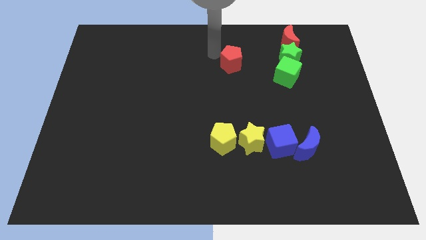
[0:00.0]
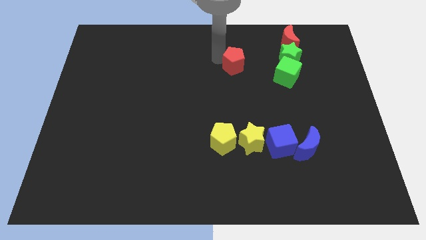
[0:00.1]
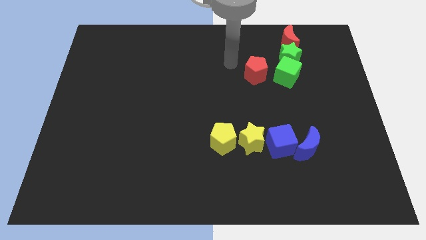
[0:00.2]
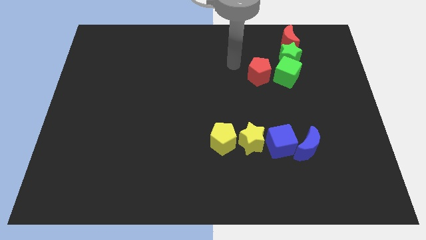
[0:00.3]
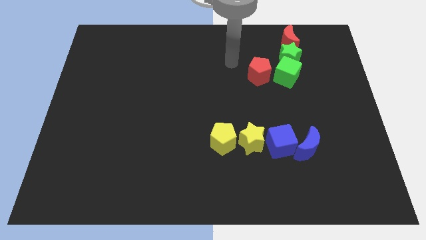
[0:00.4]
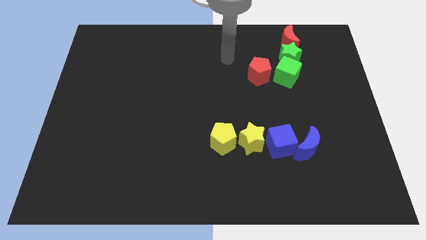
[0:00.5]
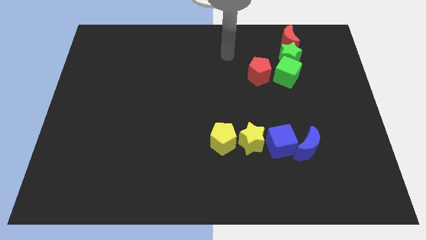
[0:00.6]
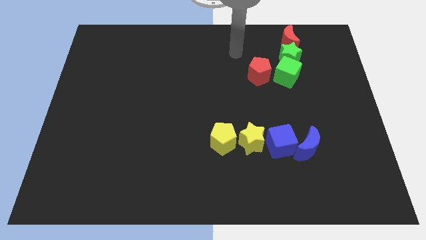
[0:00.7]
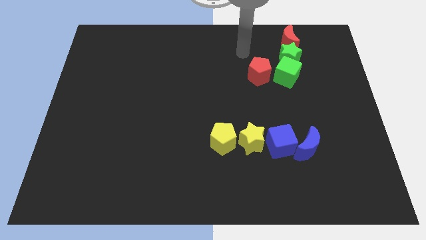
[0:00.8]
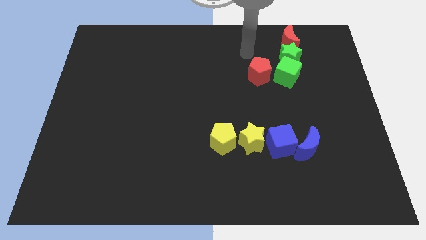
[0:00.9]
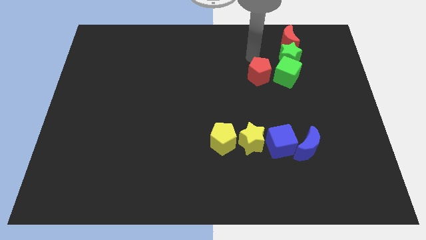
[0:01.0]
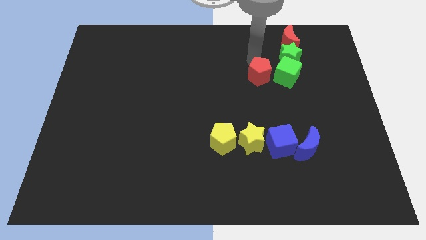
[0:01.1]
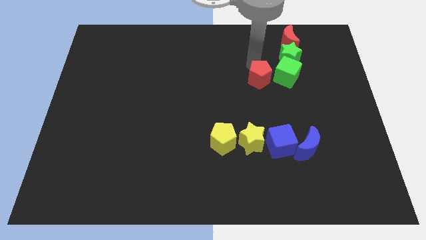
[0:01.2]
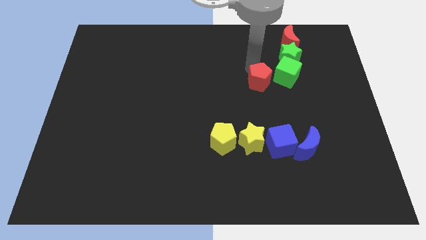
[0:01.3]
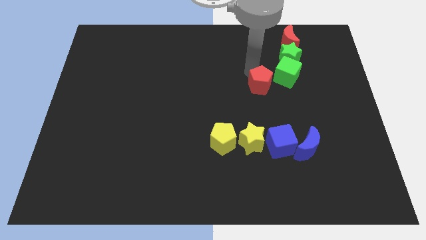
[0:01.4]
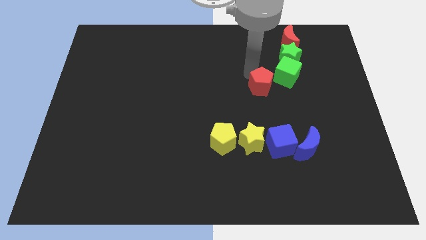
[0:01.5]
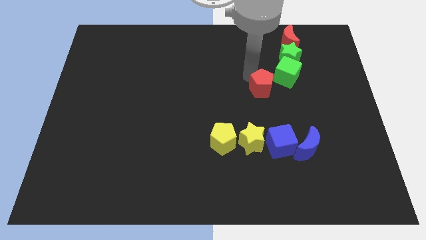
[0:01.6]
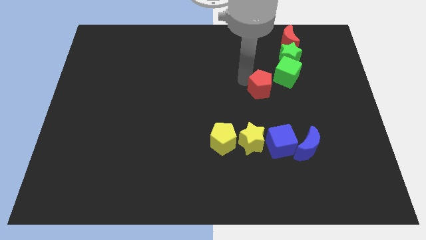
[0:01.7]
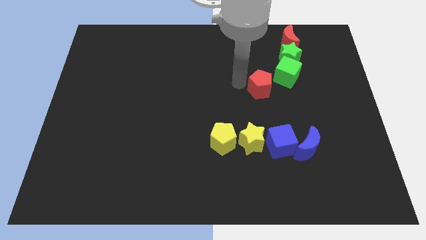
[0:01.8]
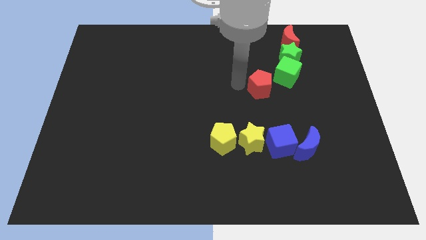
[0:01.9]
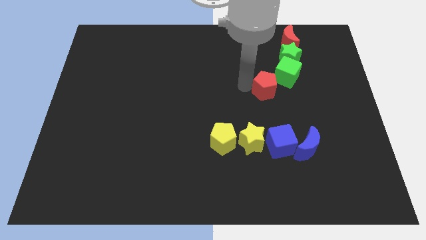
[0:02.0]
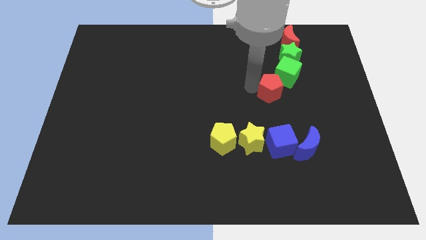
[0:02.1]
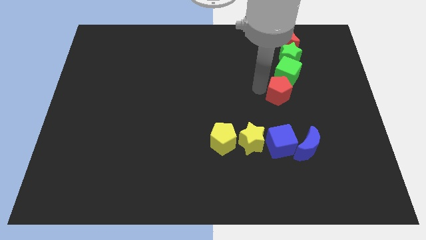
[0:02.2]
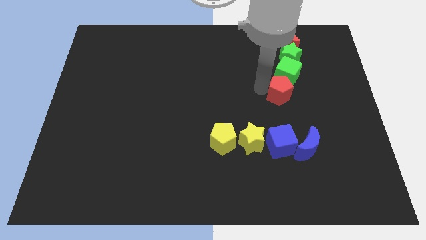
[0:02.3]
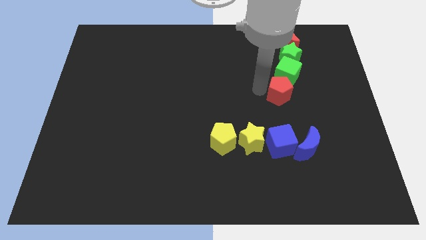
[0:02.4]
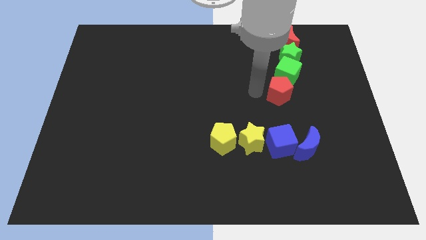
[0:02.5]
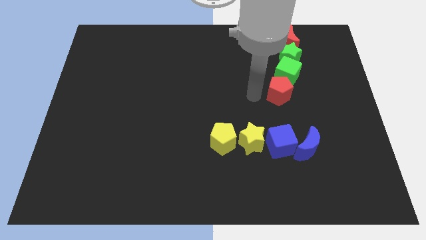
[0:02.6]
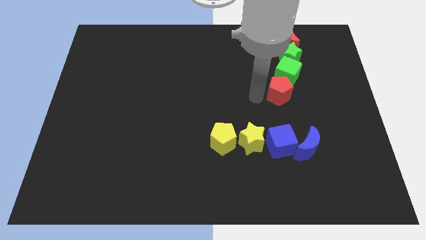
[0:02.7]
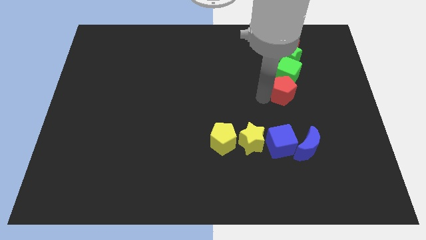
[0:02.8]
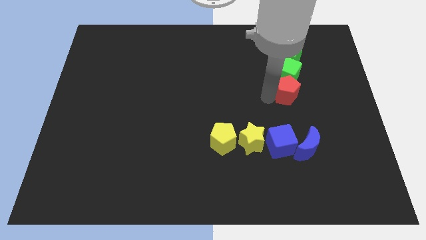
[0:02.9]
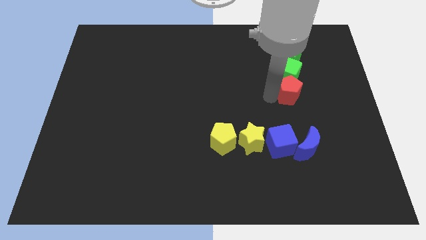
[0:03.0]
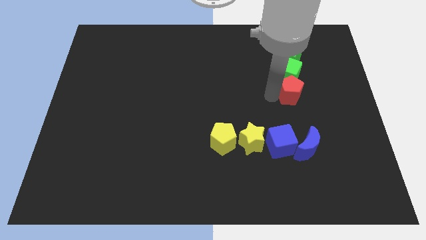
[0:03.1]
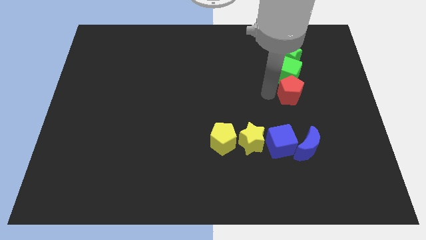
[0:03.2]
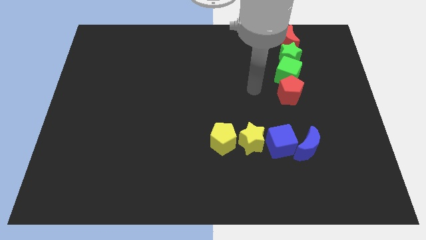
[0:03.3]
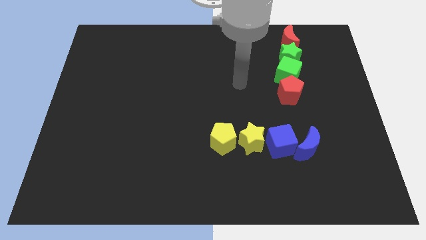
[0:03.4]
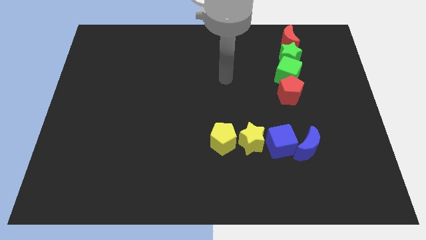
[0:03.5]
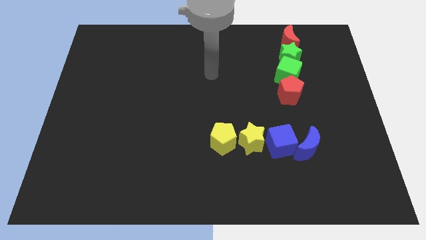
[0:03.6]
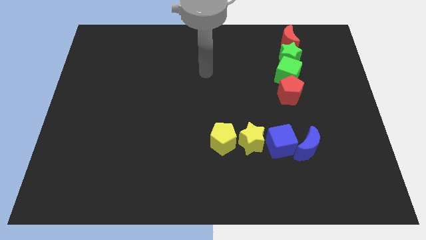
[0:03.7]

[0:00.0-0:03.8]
put the red pentagon at the bottom of the vertical line of blocks

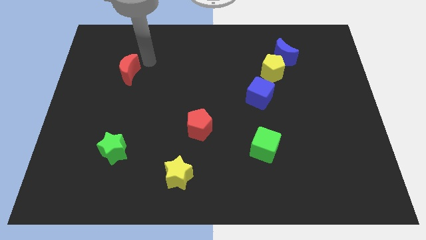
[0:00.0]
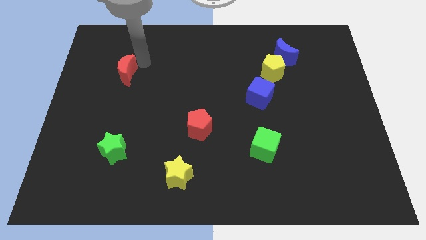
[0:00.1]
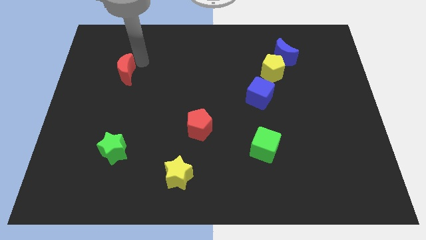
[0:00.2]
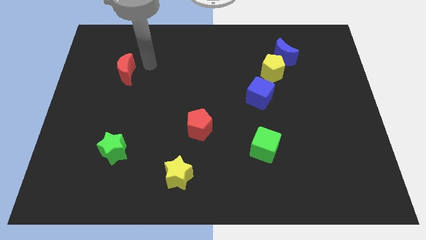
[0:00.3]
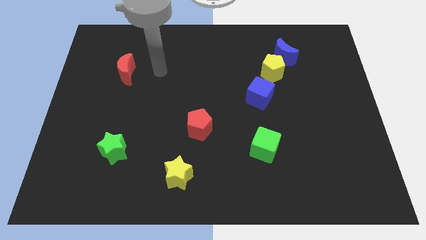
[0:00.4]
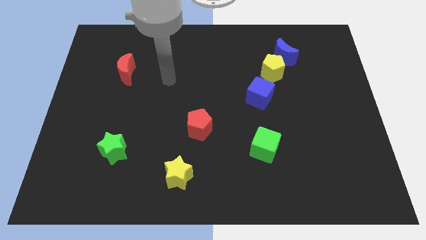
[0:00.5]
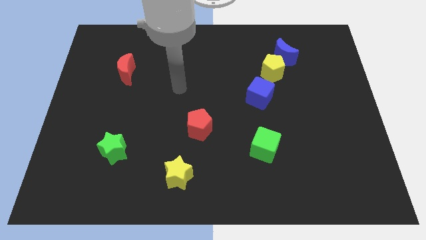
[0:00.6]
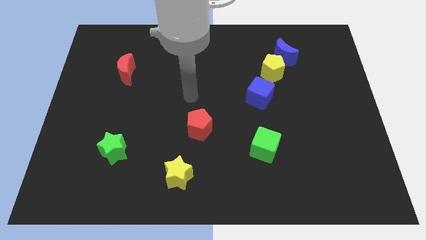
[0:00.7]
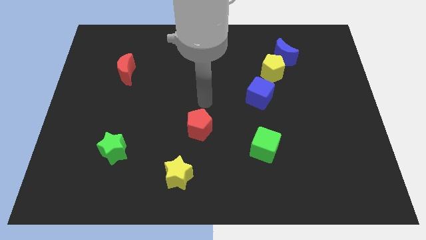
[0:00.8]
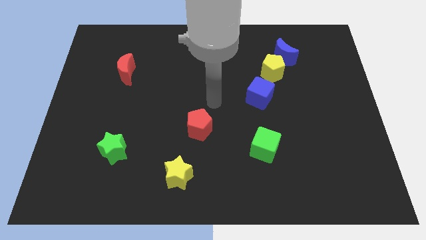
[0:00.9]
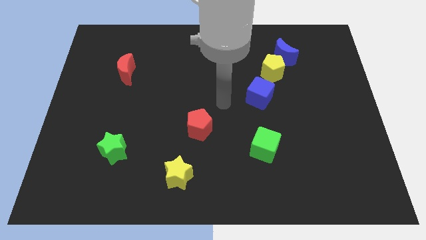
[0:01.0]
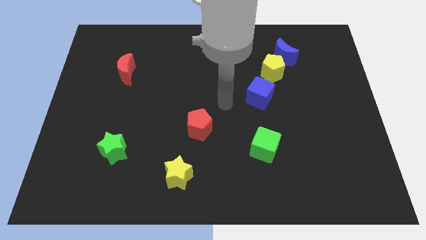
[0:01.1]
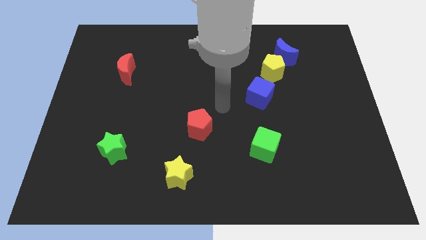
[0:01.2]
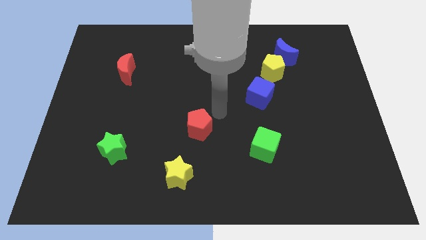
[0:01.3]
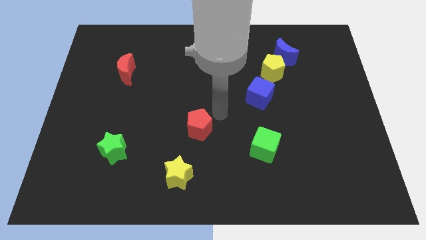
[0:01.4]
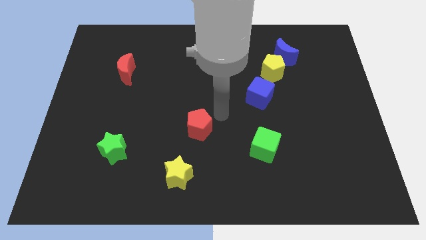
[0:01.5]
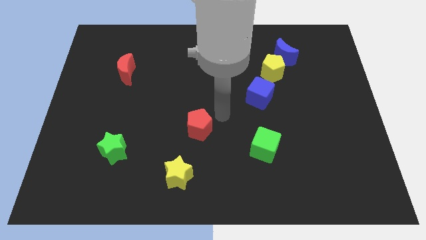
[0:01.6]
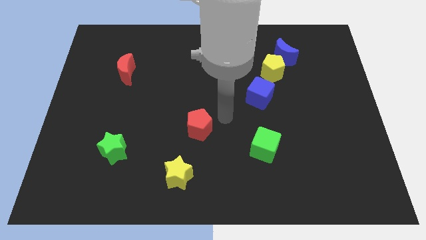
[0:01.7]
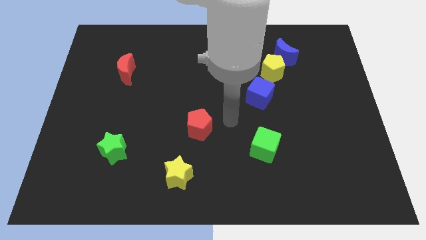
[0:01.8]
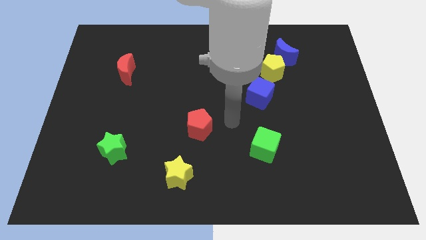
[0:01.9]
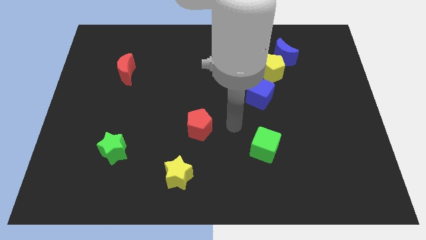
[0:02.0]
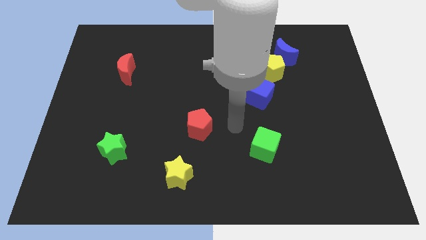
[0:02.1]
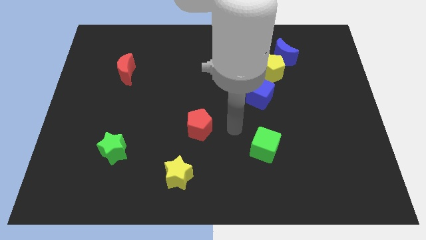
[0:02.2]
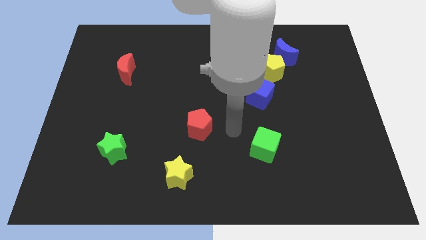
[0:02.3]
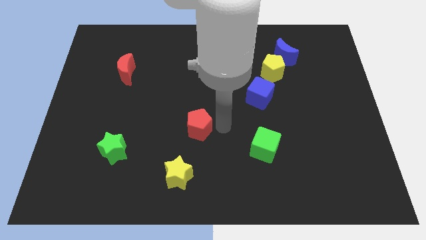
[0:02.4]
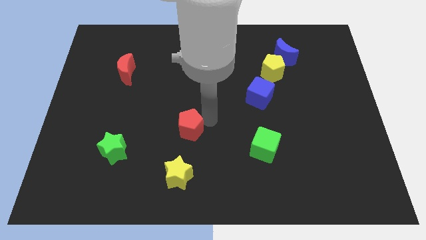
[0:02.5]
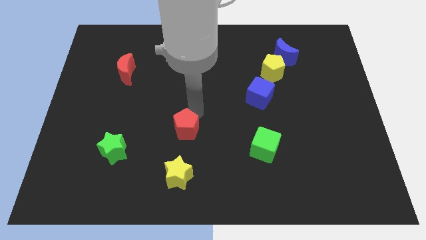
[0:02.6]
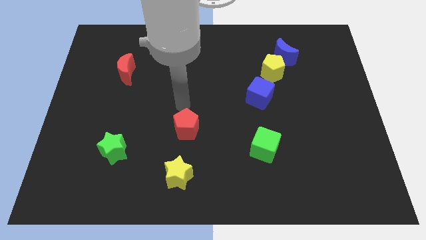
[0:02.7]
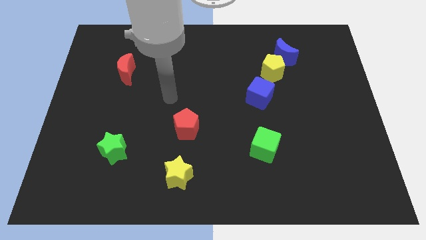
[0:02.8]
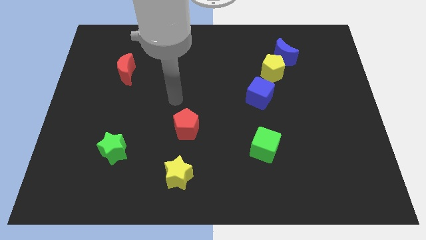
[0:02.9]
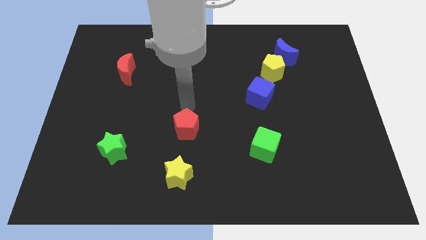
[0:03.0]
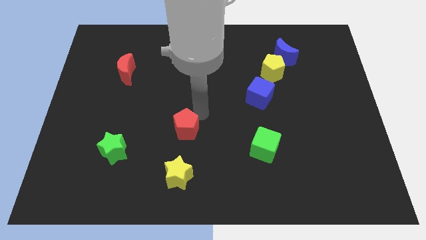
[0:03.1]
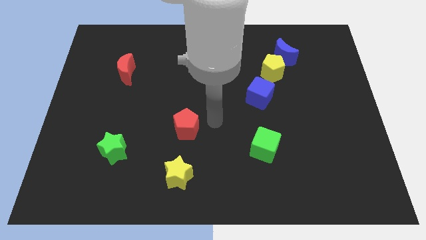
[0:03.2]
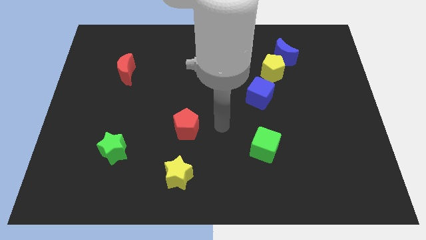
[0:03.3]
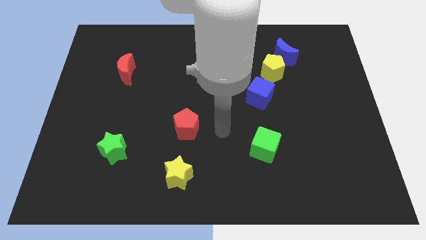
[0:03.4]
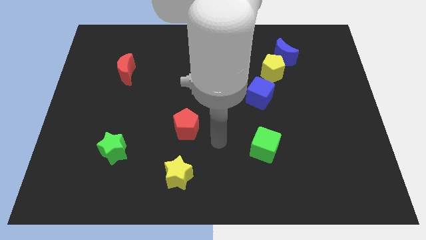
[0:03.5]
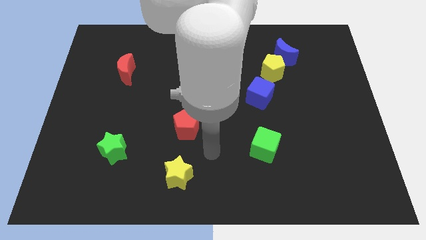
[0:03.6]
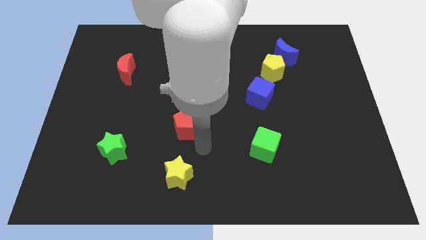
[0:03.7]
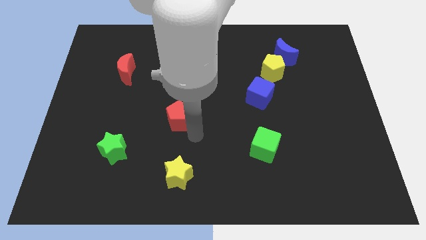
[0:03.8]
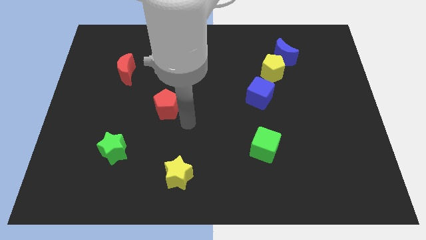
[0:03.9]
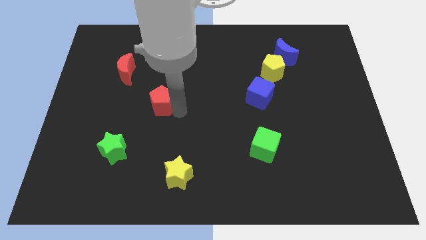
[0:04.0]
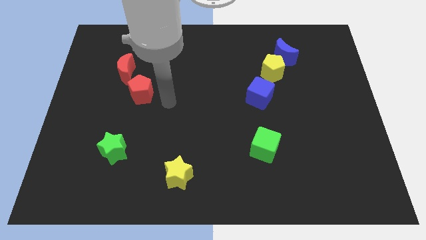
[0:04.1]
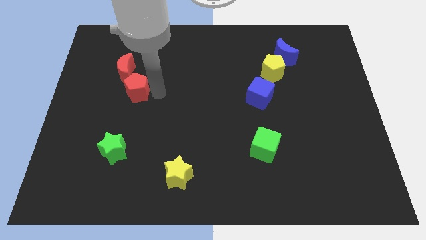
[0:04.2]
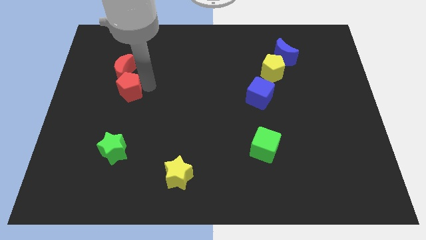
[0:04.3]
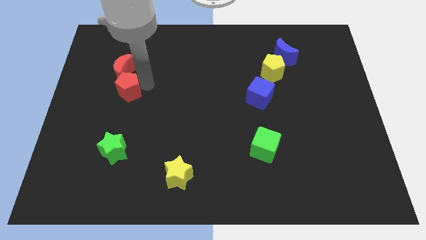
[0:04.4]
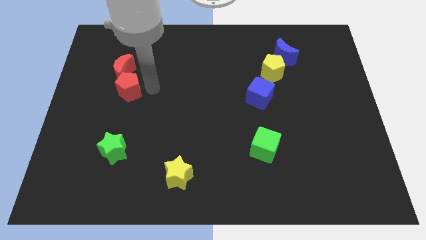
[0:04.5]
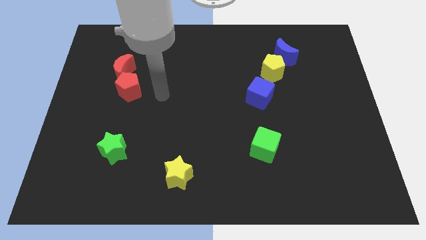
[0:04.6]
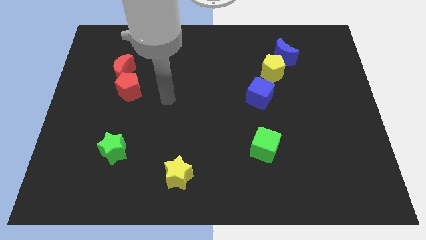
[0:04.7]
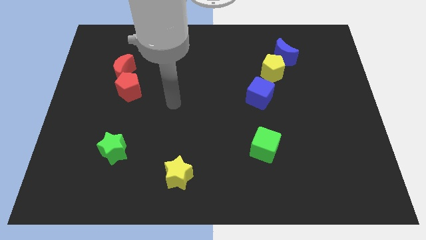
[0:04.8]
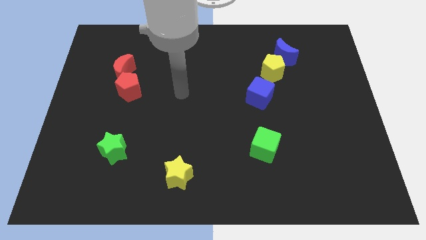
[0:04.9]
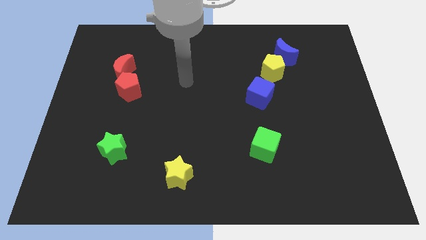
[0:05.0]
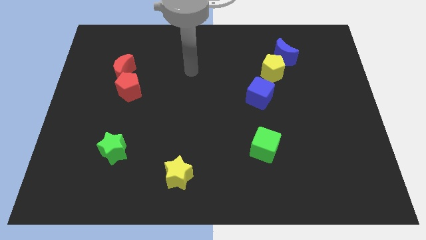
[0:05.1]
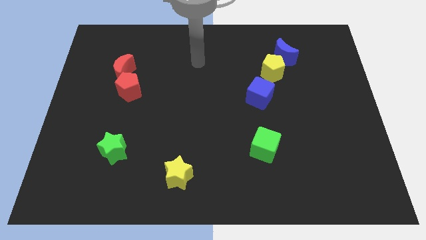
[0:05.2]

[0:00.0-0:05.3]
place red pentagon close to the red crescent

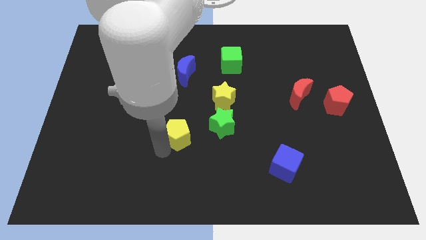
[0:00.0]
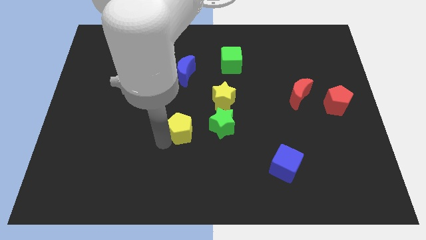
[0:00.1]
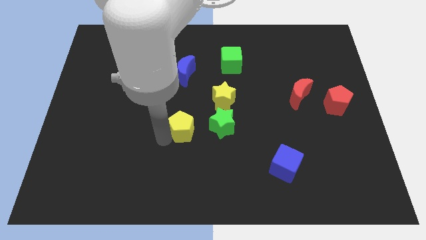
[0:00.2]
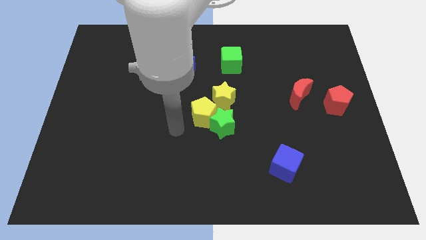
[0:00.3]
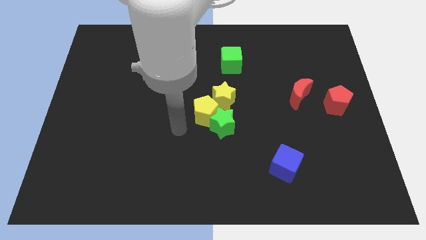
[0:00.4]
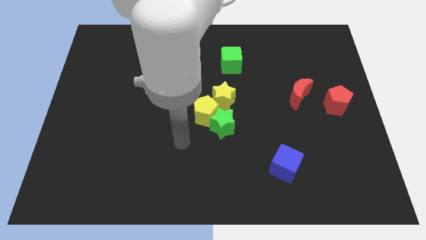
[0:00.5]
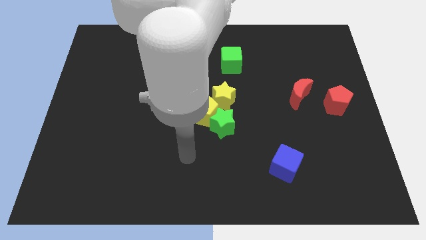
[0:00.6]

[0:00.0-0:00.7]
place yellow pentagon left to green star and yellow star
